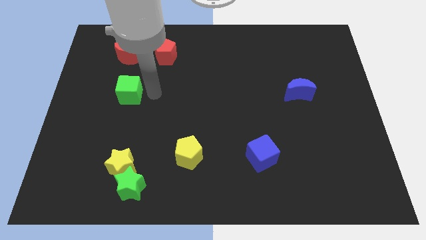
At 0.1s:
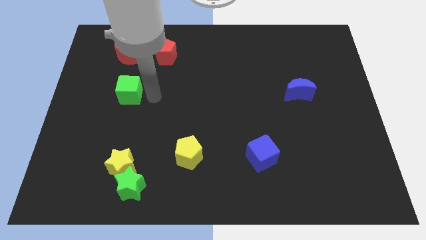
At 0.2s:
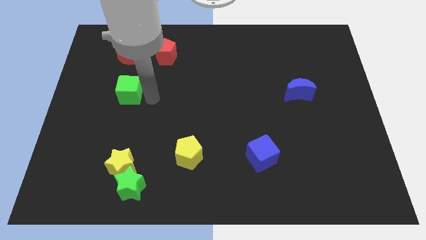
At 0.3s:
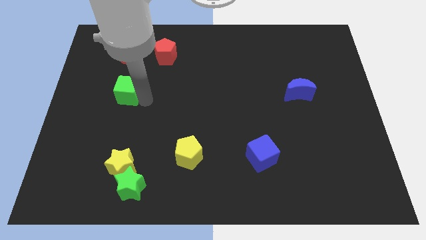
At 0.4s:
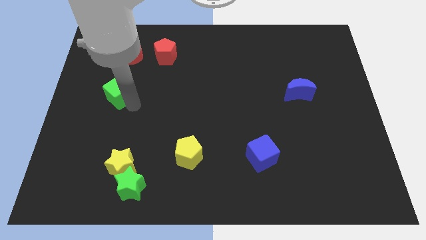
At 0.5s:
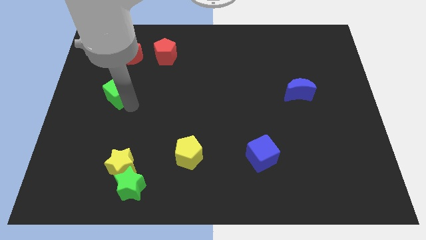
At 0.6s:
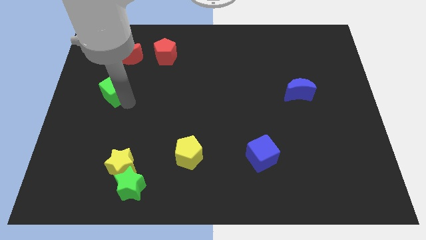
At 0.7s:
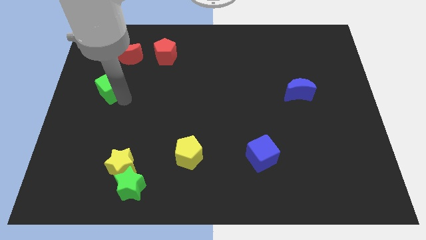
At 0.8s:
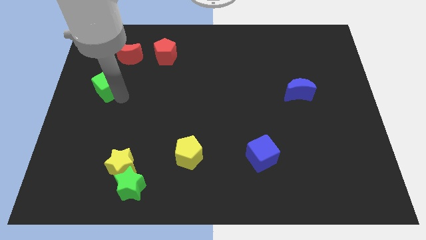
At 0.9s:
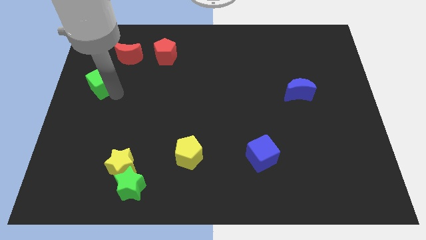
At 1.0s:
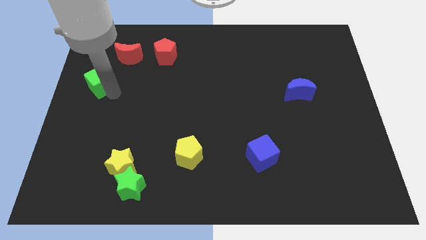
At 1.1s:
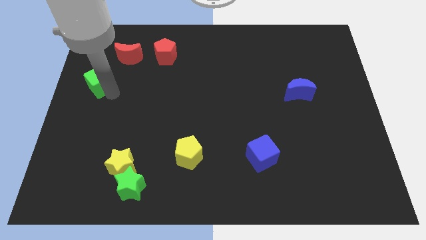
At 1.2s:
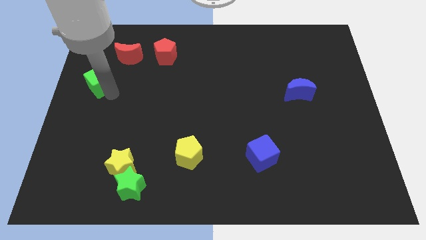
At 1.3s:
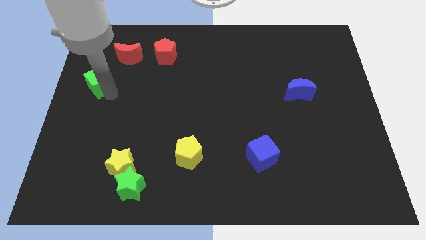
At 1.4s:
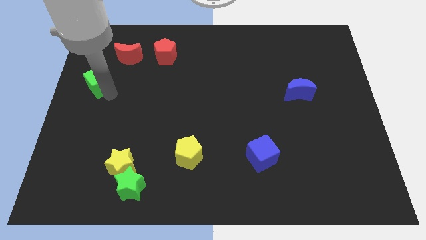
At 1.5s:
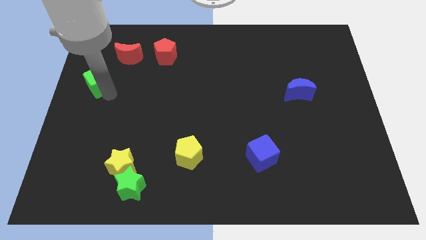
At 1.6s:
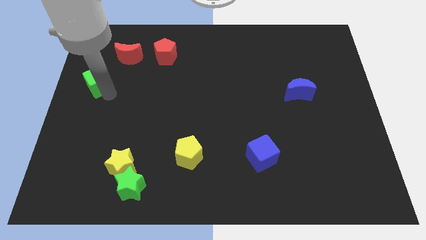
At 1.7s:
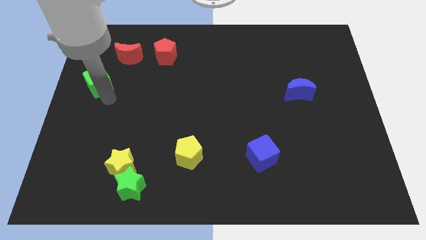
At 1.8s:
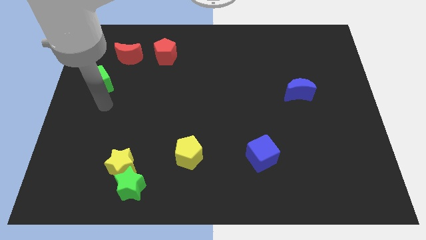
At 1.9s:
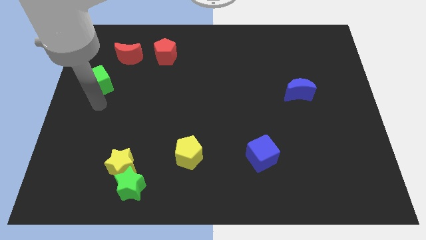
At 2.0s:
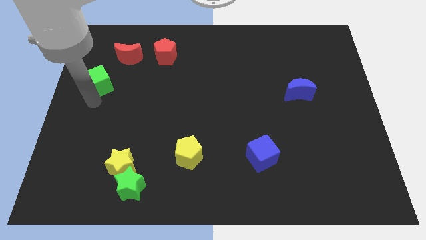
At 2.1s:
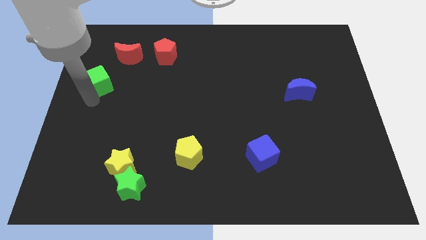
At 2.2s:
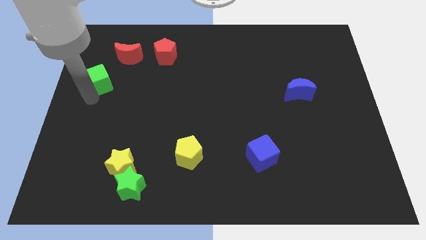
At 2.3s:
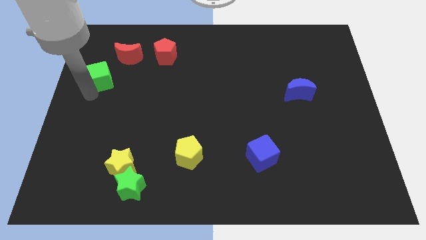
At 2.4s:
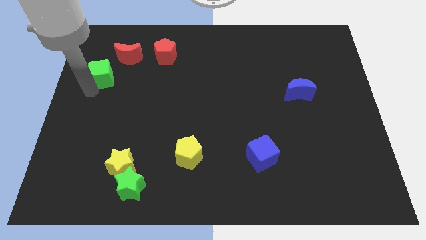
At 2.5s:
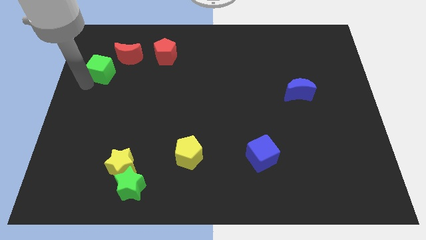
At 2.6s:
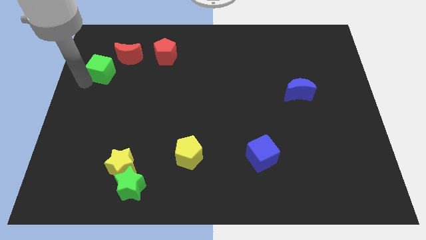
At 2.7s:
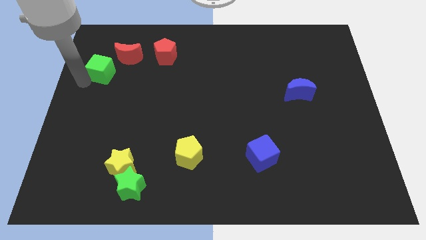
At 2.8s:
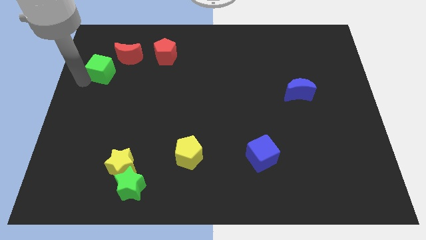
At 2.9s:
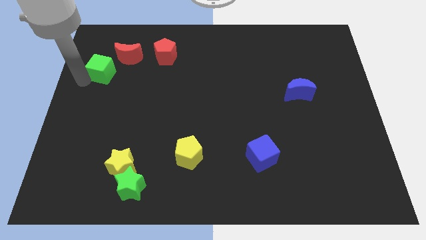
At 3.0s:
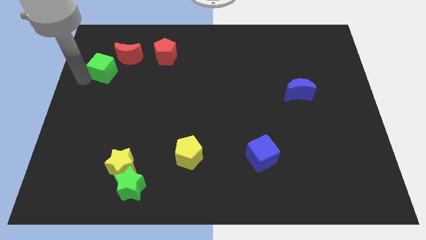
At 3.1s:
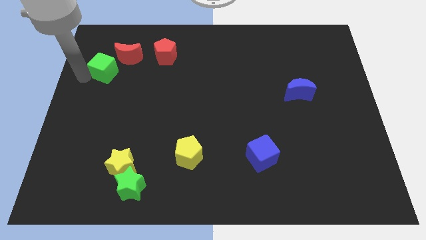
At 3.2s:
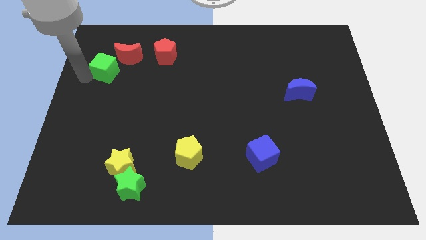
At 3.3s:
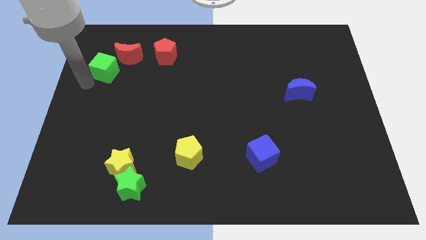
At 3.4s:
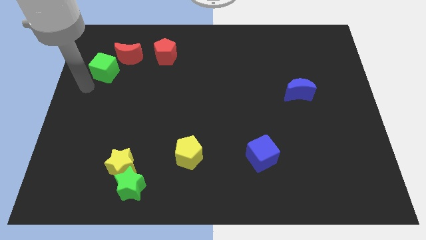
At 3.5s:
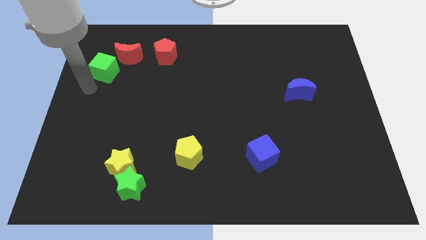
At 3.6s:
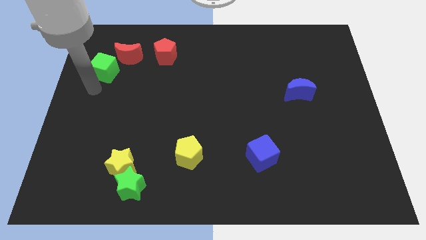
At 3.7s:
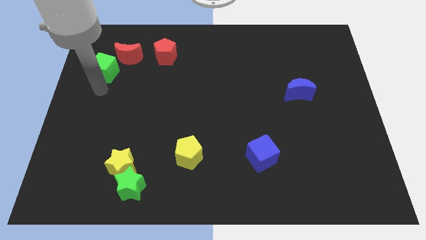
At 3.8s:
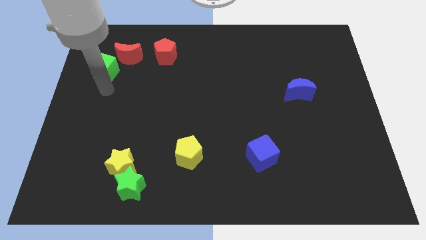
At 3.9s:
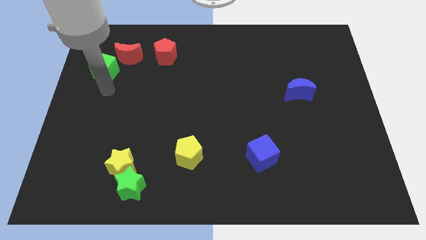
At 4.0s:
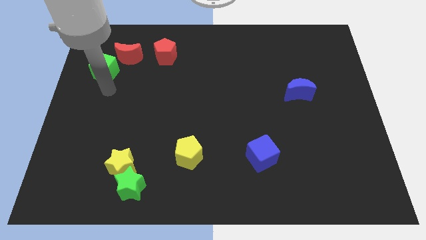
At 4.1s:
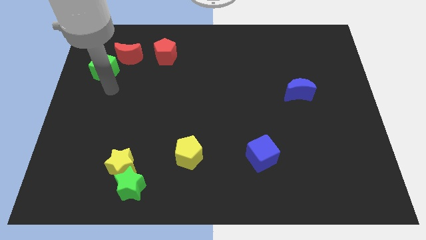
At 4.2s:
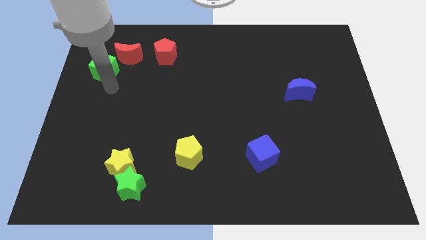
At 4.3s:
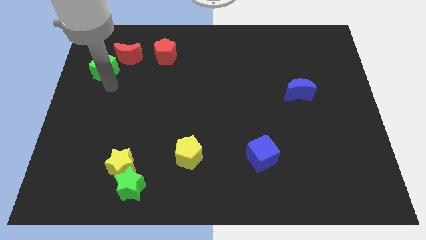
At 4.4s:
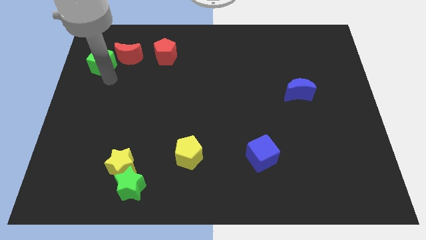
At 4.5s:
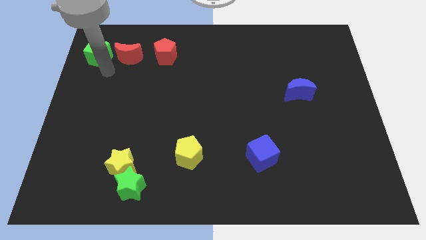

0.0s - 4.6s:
move green cube left beside the red moon

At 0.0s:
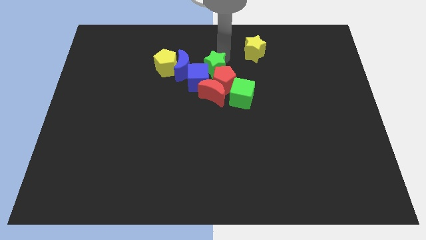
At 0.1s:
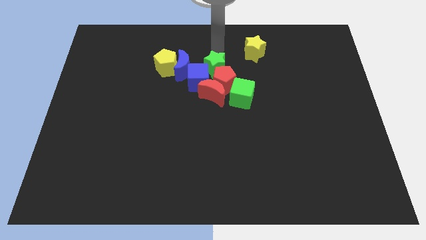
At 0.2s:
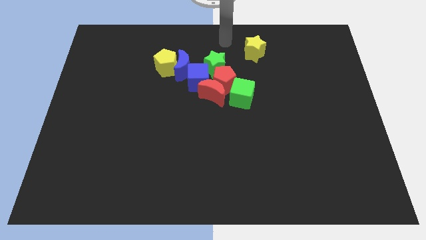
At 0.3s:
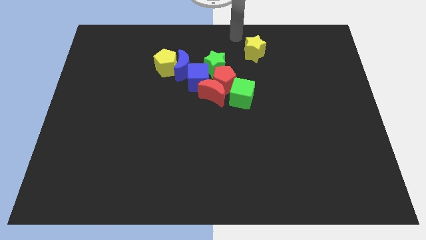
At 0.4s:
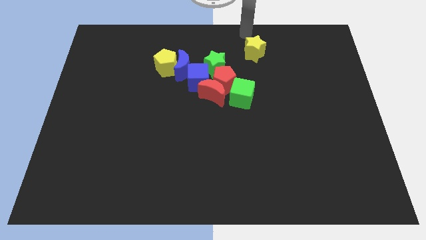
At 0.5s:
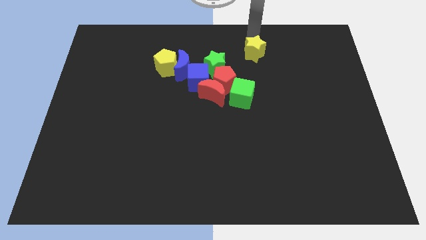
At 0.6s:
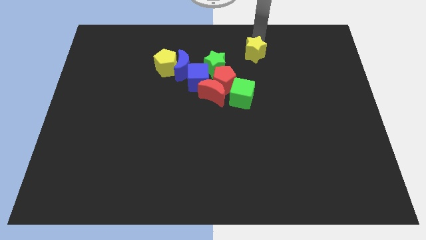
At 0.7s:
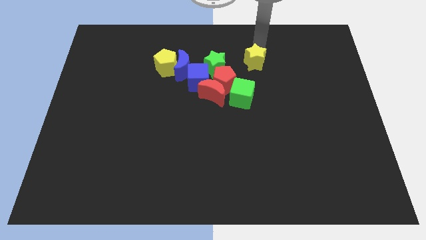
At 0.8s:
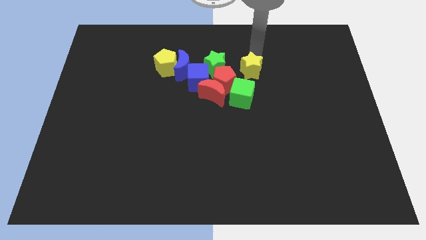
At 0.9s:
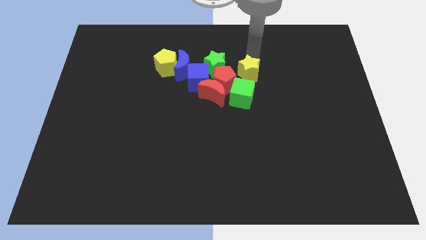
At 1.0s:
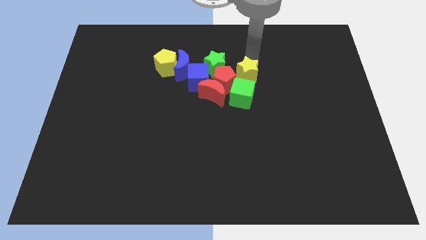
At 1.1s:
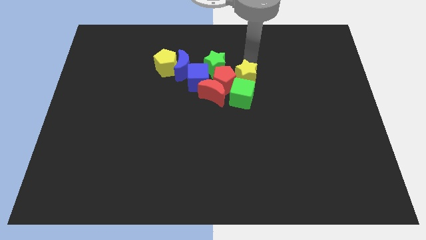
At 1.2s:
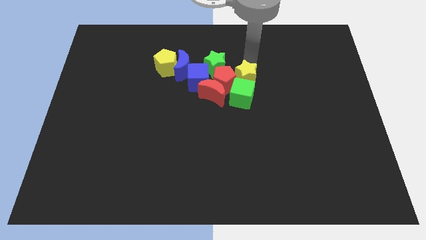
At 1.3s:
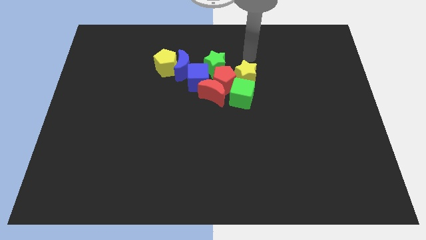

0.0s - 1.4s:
push the yellow star into green cube on top

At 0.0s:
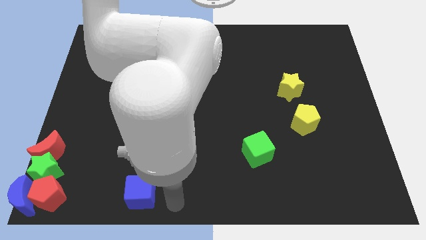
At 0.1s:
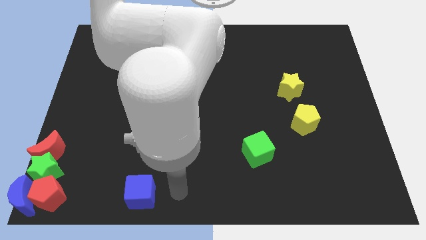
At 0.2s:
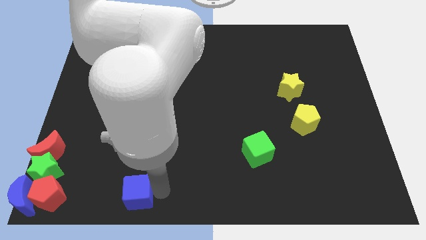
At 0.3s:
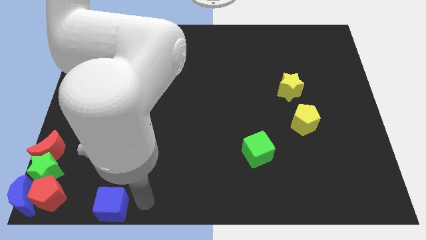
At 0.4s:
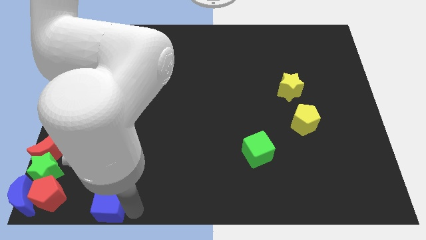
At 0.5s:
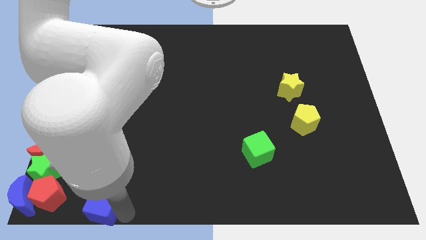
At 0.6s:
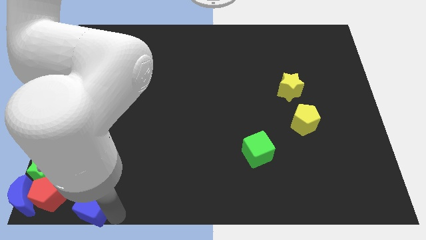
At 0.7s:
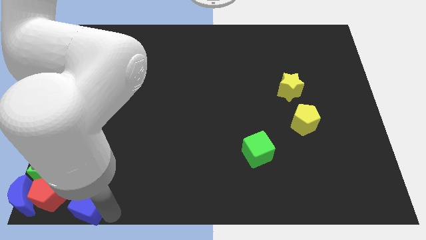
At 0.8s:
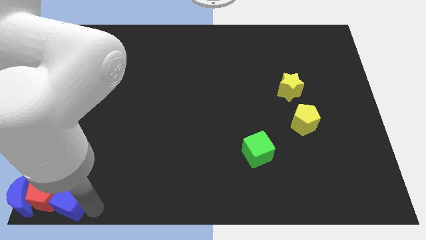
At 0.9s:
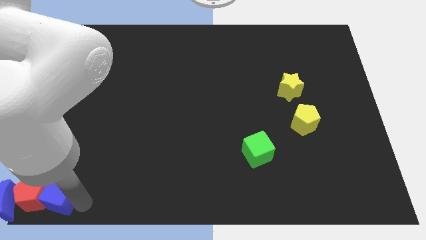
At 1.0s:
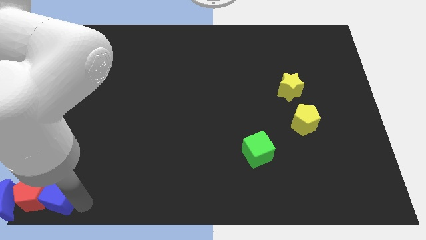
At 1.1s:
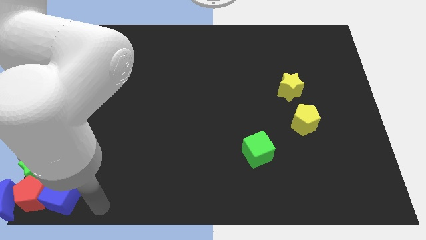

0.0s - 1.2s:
move blue cube into red pentagon

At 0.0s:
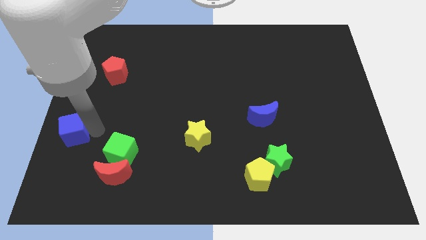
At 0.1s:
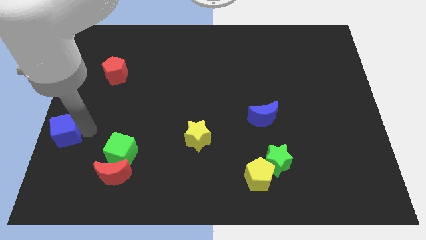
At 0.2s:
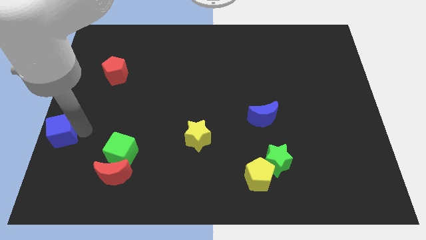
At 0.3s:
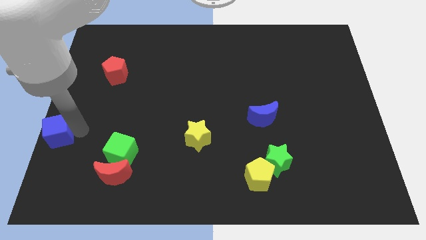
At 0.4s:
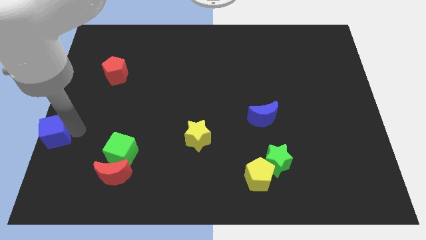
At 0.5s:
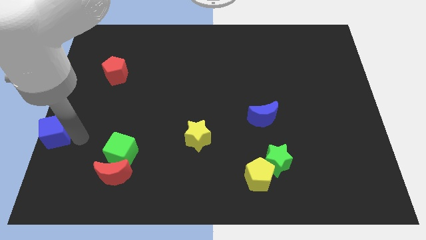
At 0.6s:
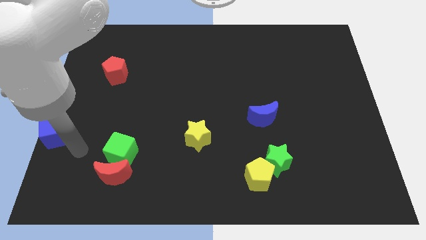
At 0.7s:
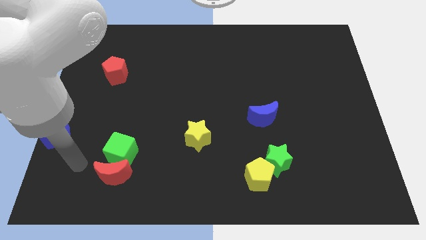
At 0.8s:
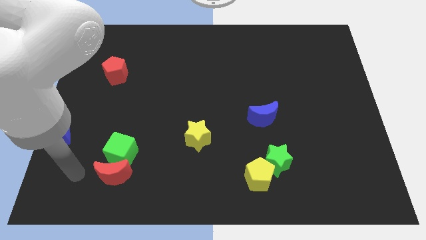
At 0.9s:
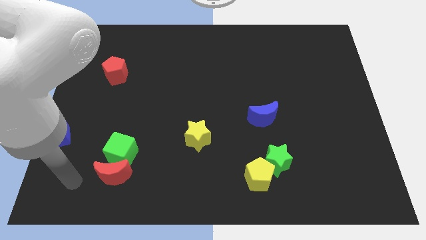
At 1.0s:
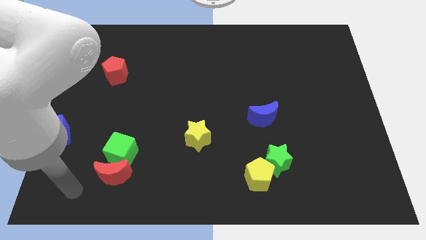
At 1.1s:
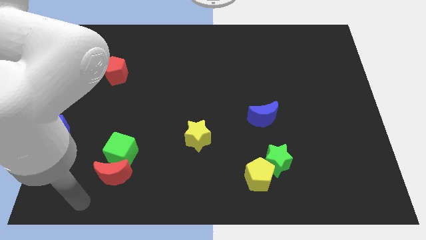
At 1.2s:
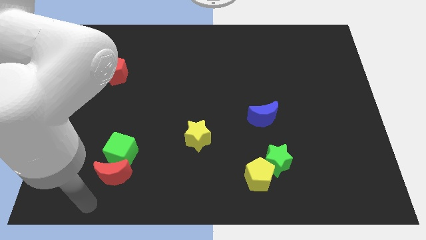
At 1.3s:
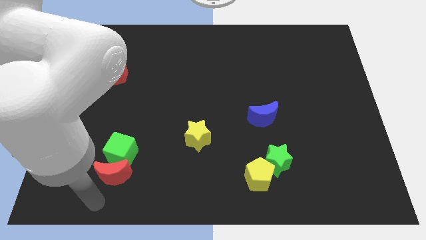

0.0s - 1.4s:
move blue cube to the left

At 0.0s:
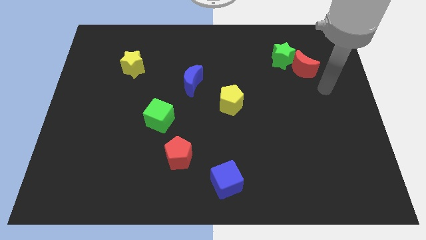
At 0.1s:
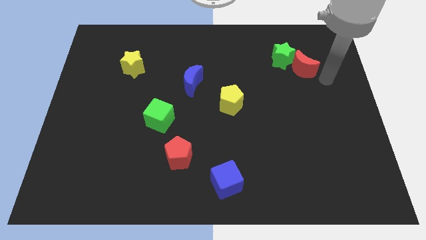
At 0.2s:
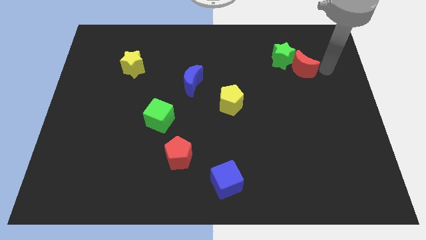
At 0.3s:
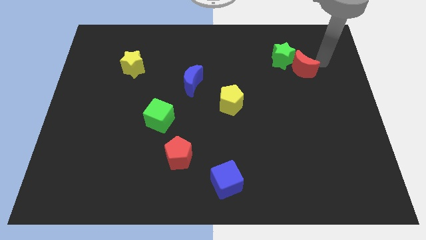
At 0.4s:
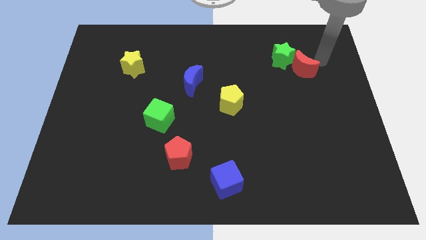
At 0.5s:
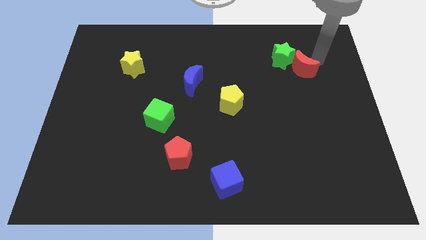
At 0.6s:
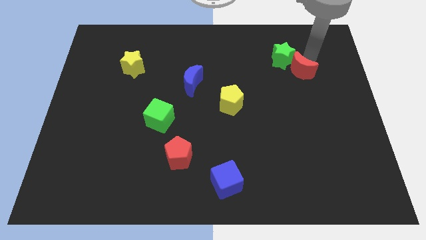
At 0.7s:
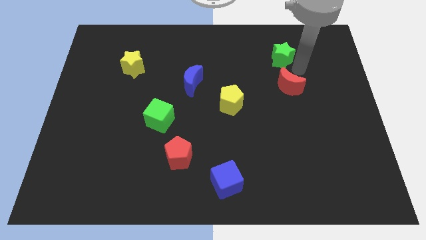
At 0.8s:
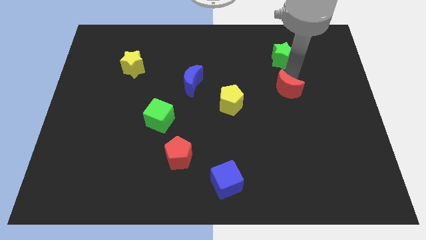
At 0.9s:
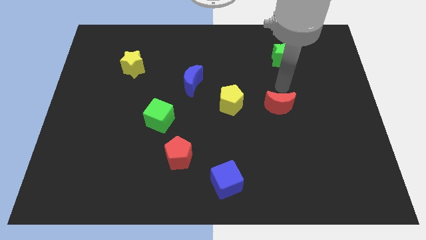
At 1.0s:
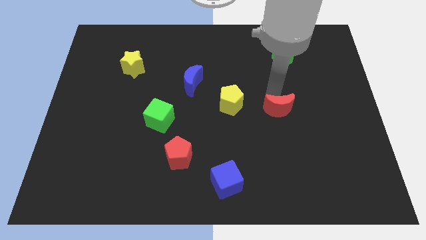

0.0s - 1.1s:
push the red moon to the right side of the yellow pentagon
